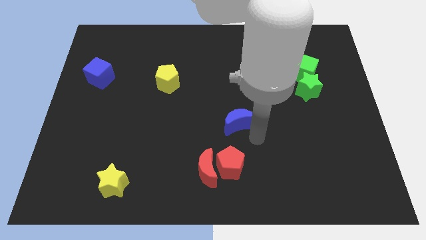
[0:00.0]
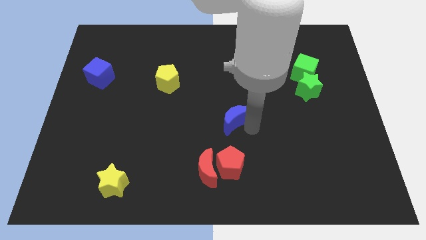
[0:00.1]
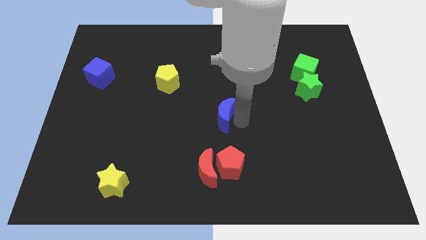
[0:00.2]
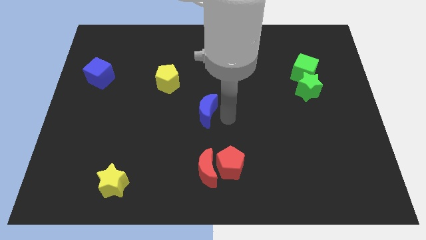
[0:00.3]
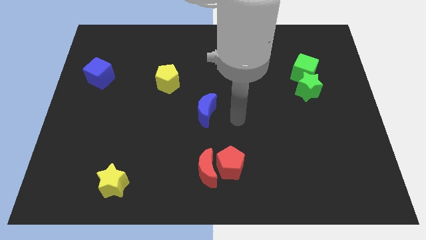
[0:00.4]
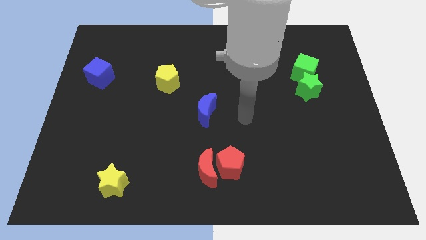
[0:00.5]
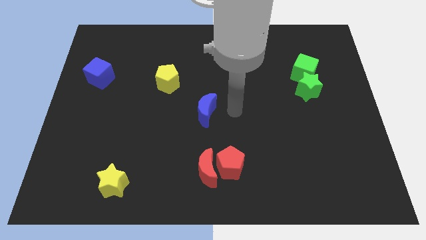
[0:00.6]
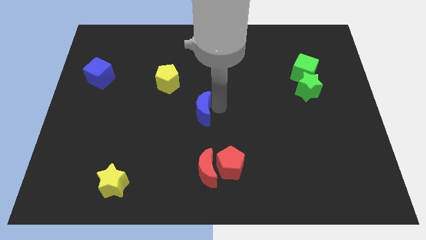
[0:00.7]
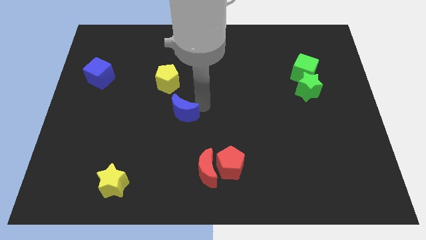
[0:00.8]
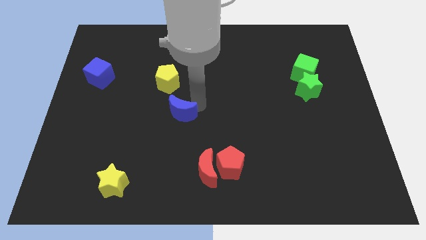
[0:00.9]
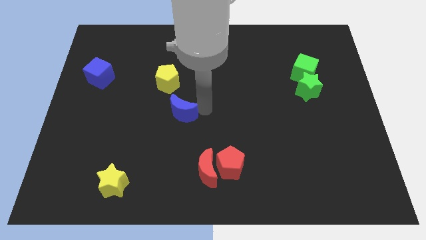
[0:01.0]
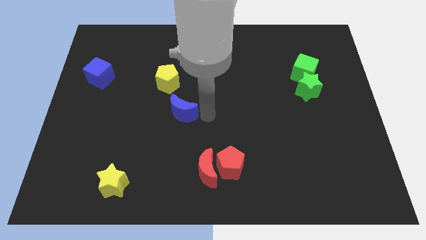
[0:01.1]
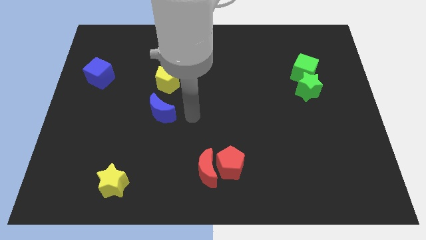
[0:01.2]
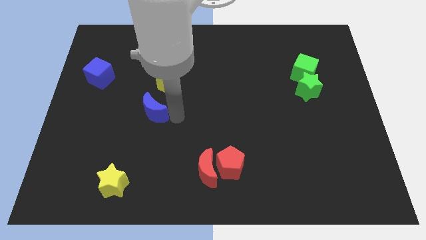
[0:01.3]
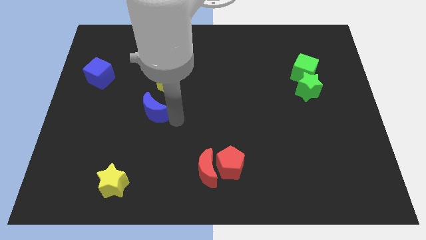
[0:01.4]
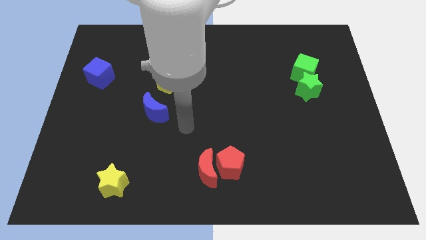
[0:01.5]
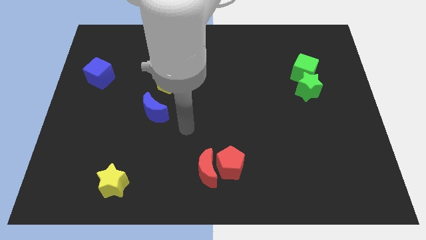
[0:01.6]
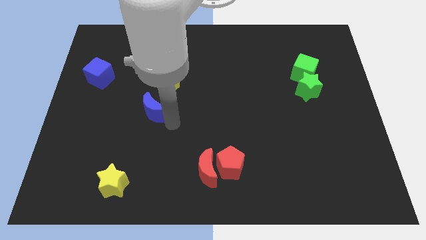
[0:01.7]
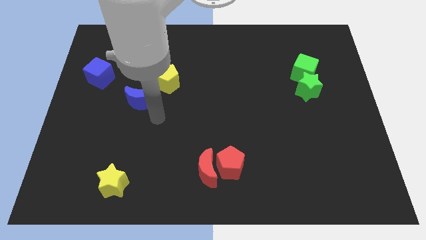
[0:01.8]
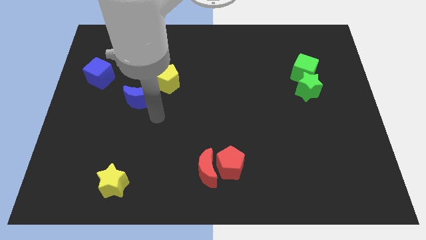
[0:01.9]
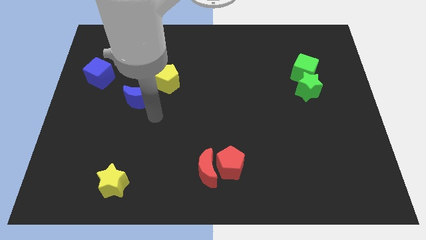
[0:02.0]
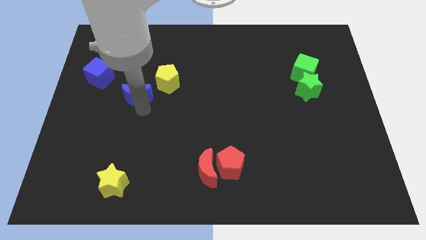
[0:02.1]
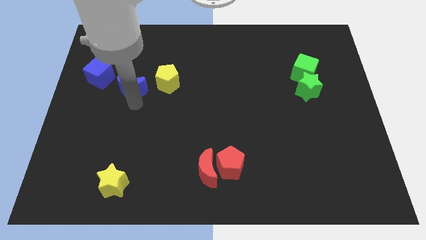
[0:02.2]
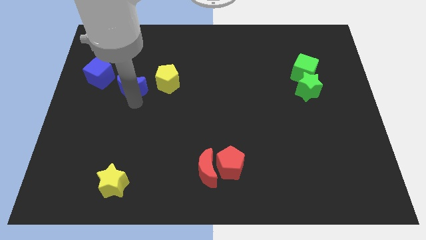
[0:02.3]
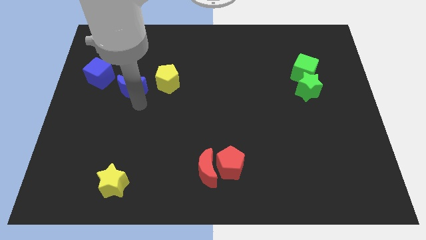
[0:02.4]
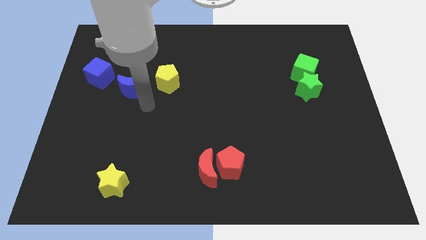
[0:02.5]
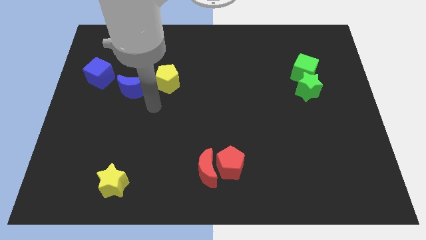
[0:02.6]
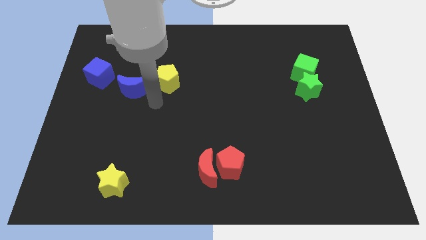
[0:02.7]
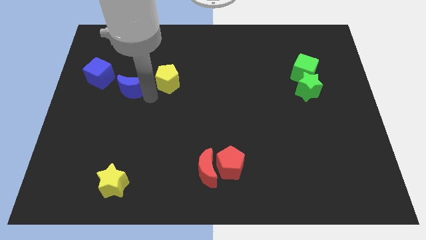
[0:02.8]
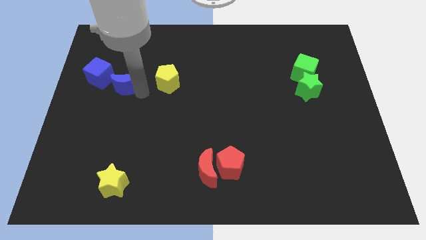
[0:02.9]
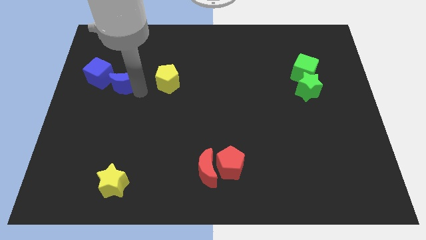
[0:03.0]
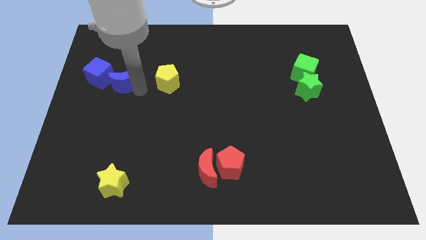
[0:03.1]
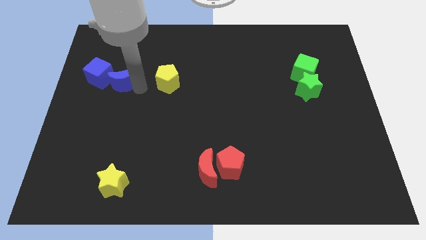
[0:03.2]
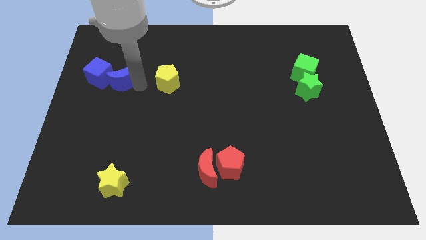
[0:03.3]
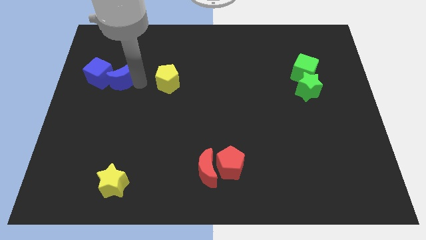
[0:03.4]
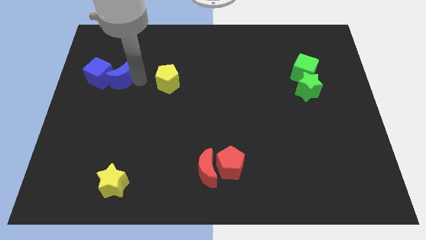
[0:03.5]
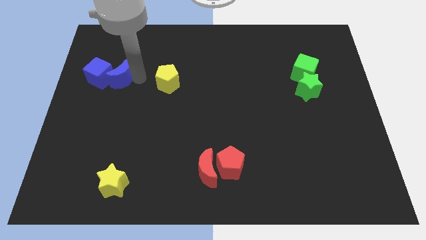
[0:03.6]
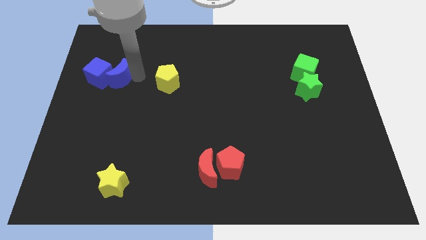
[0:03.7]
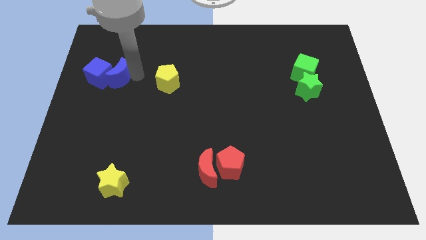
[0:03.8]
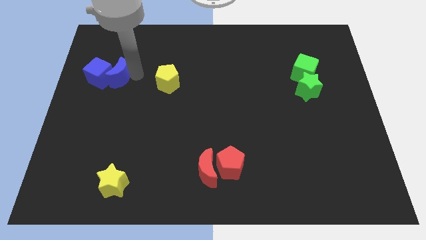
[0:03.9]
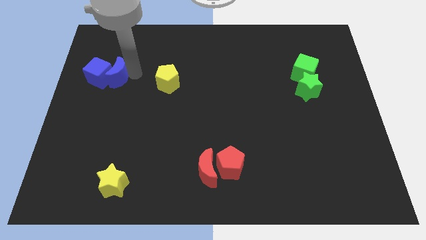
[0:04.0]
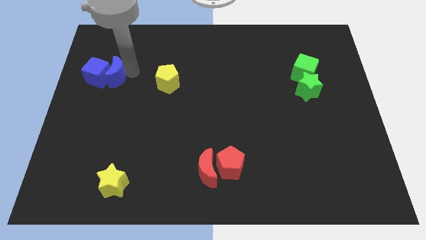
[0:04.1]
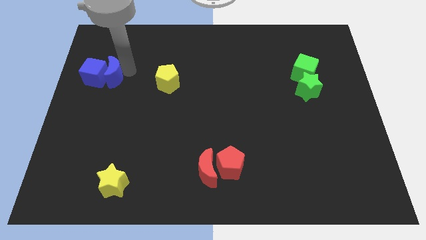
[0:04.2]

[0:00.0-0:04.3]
group the two blue blocks at the left of the yellow pentagon

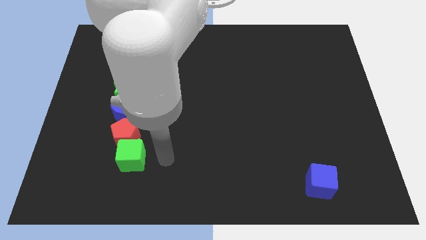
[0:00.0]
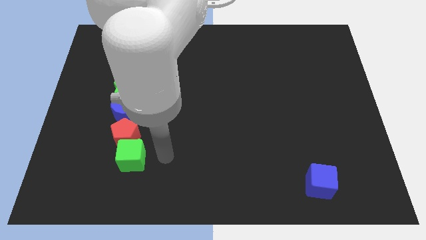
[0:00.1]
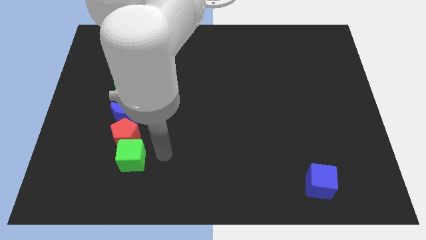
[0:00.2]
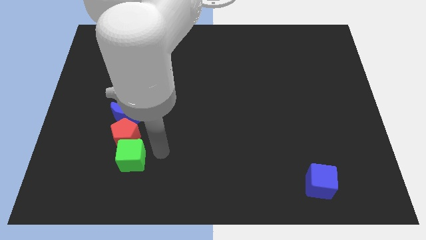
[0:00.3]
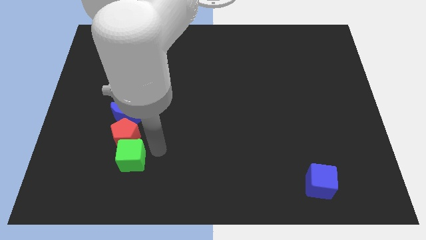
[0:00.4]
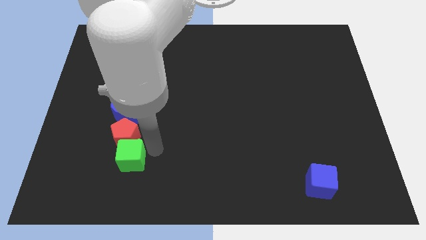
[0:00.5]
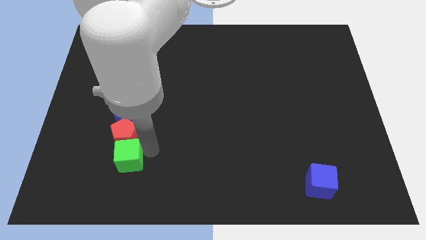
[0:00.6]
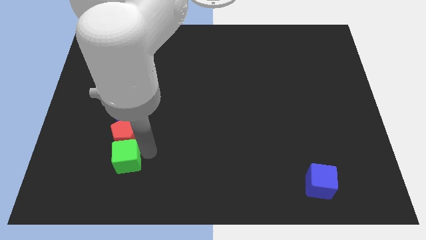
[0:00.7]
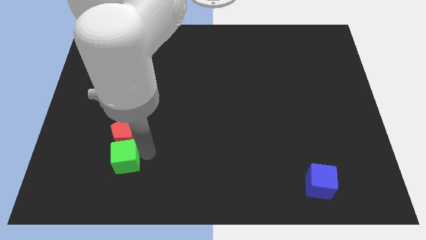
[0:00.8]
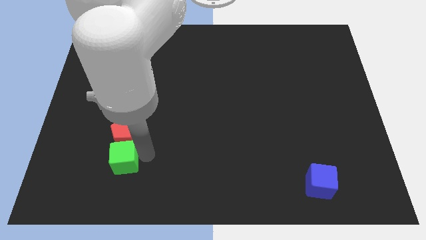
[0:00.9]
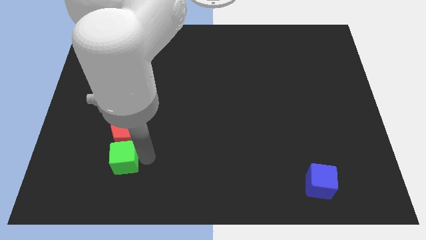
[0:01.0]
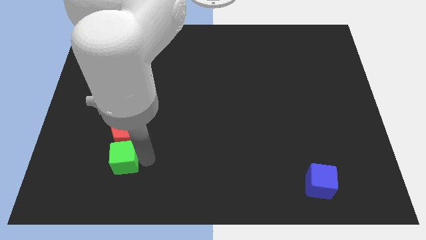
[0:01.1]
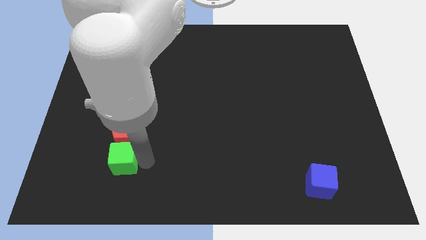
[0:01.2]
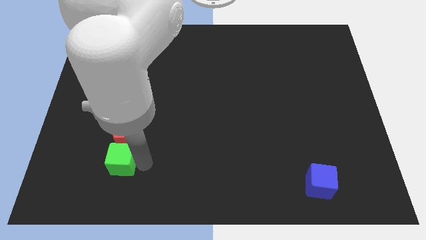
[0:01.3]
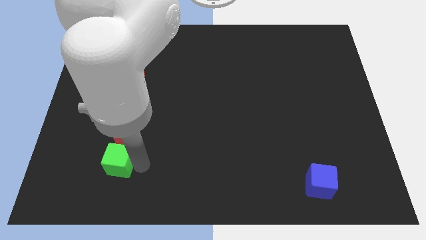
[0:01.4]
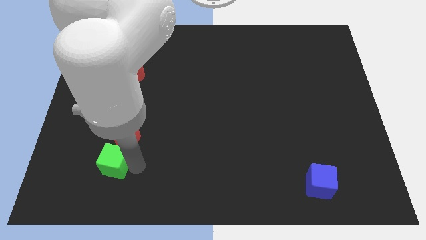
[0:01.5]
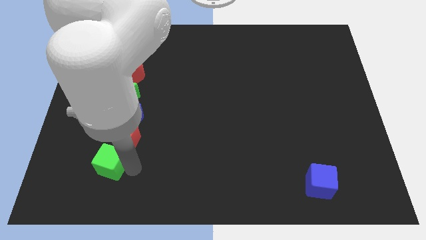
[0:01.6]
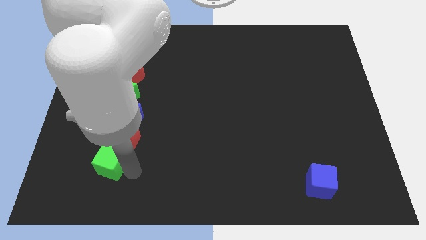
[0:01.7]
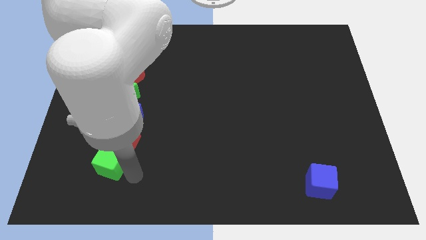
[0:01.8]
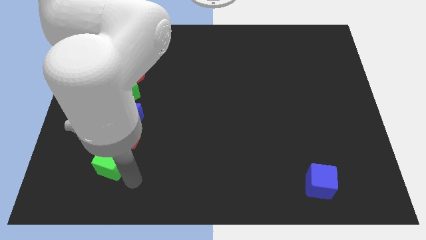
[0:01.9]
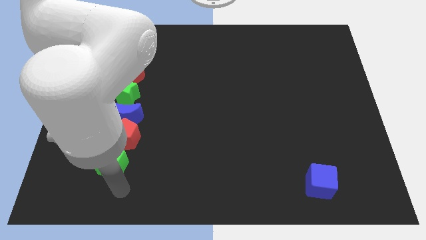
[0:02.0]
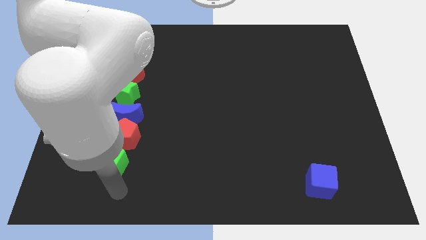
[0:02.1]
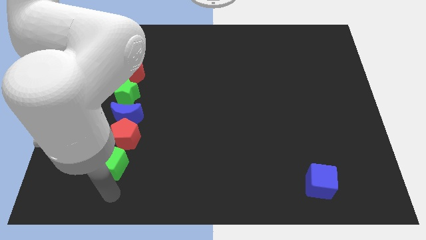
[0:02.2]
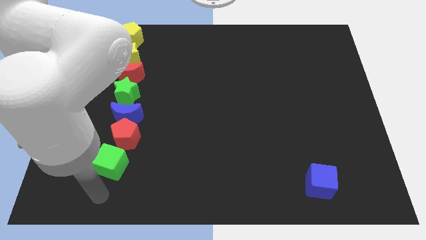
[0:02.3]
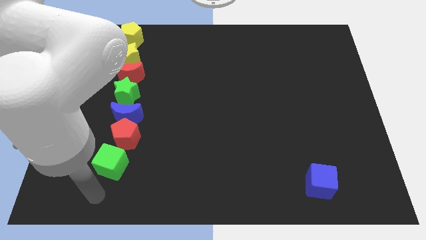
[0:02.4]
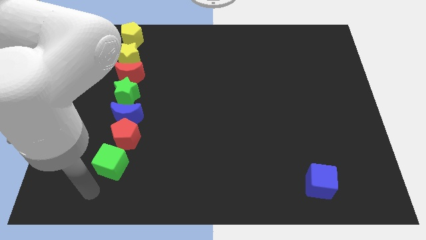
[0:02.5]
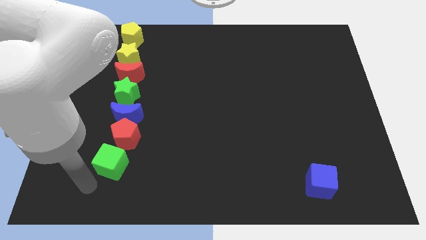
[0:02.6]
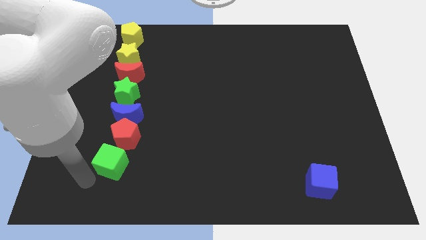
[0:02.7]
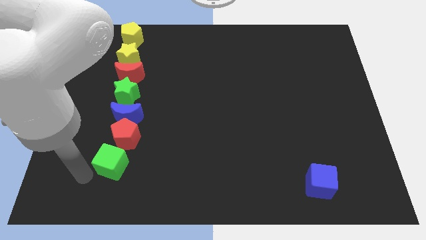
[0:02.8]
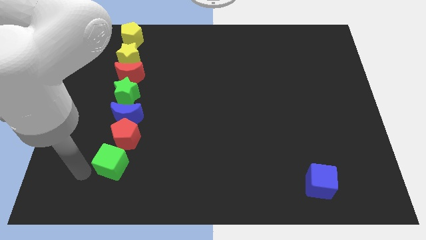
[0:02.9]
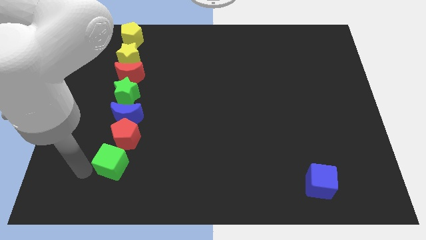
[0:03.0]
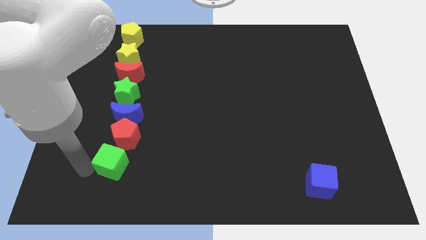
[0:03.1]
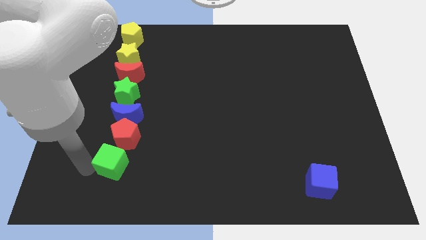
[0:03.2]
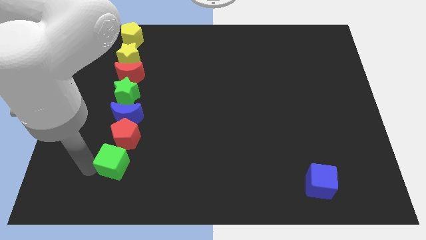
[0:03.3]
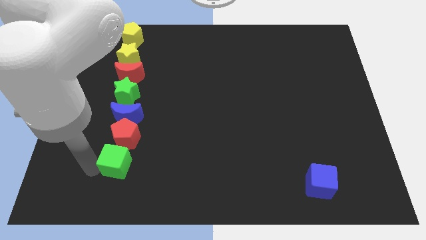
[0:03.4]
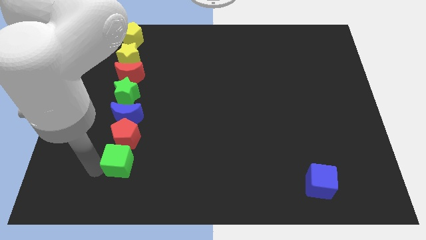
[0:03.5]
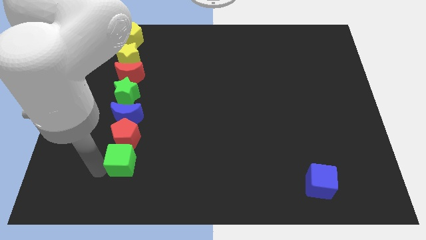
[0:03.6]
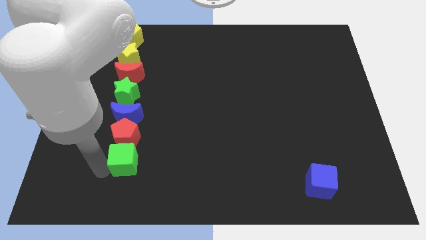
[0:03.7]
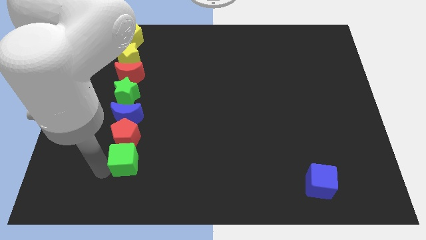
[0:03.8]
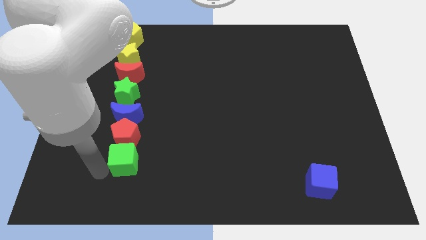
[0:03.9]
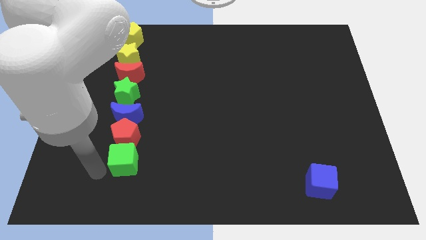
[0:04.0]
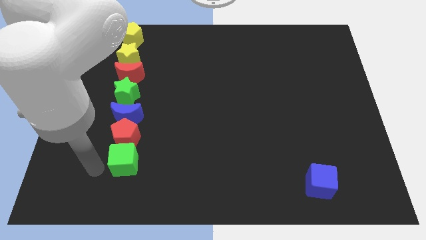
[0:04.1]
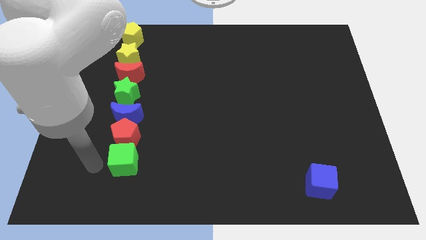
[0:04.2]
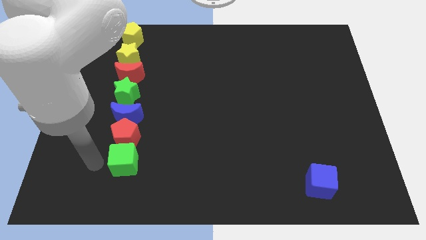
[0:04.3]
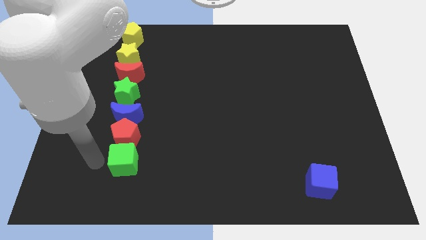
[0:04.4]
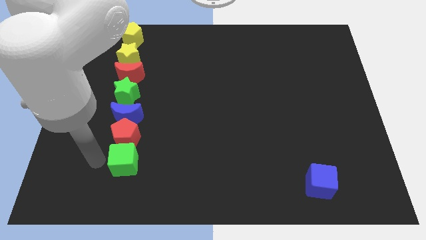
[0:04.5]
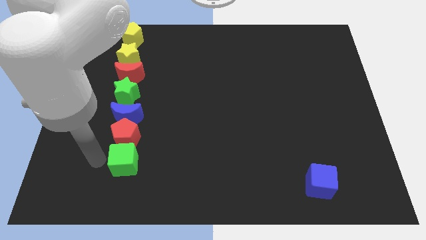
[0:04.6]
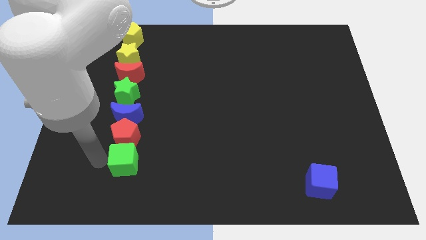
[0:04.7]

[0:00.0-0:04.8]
move green cube below the red pentagon
